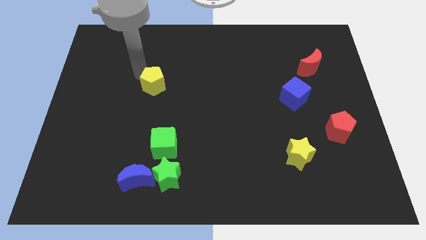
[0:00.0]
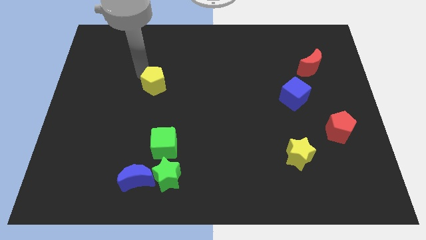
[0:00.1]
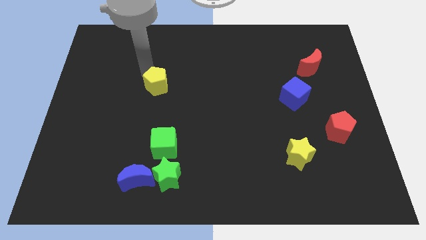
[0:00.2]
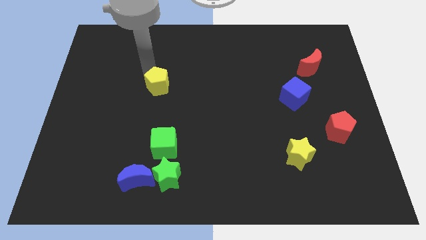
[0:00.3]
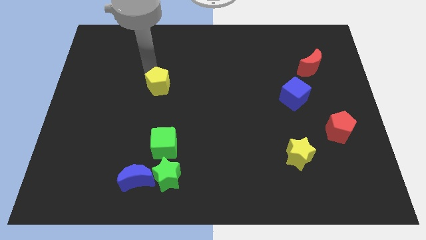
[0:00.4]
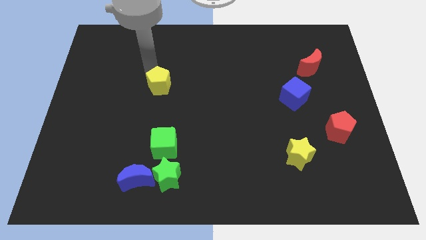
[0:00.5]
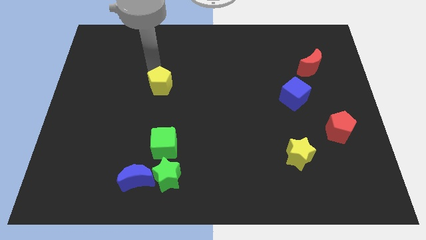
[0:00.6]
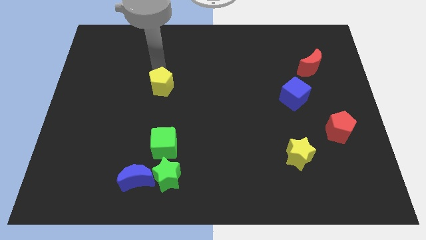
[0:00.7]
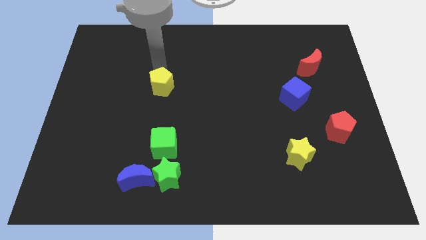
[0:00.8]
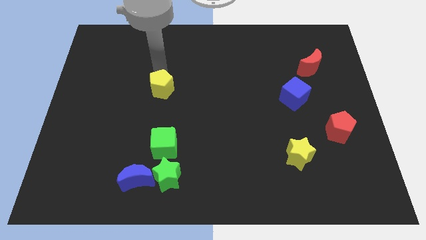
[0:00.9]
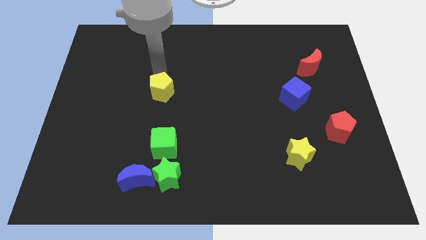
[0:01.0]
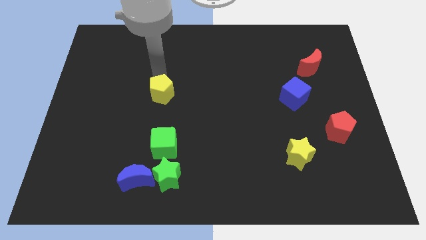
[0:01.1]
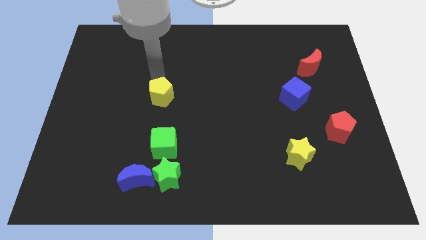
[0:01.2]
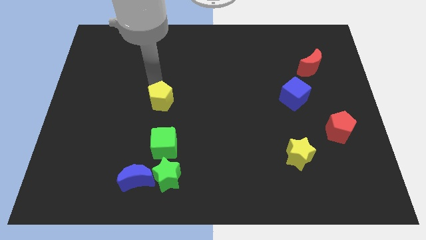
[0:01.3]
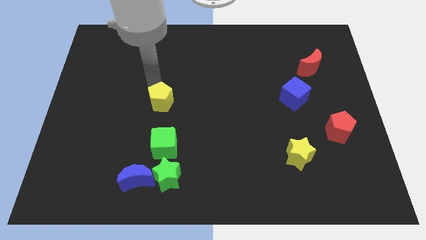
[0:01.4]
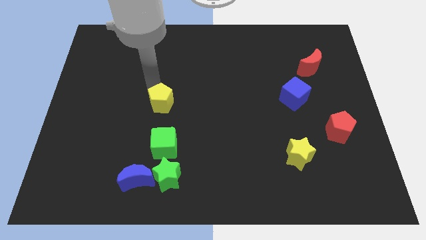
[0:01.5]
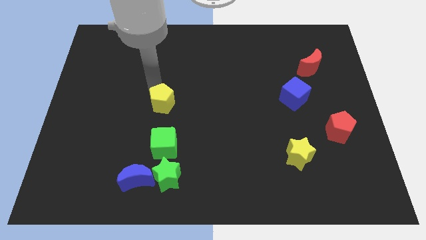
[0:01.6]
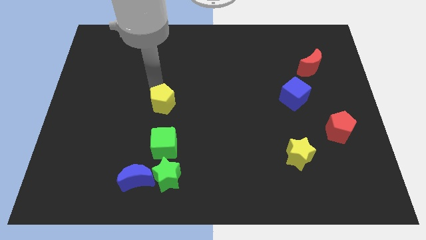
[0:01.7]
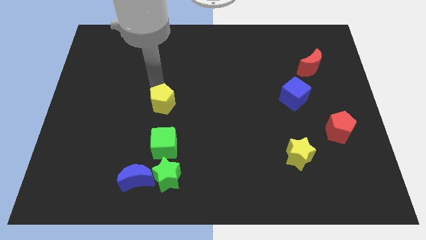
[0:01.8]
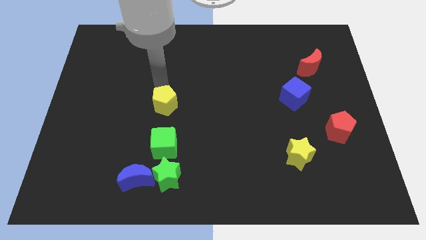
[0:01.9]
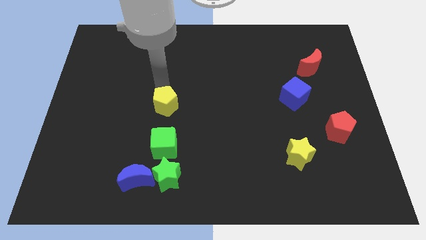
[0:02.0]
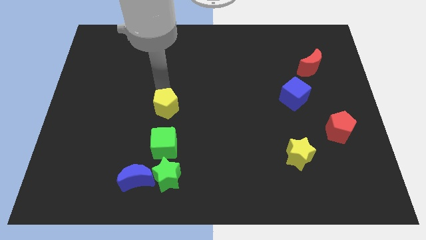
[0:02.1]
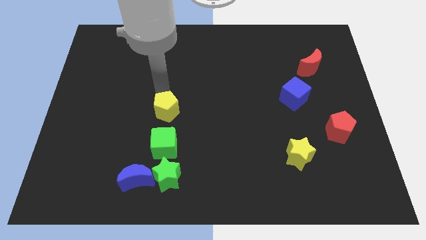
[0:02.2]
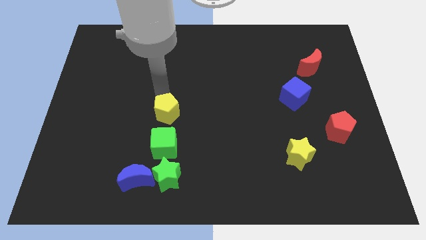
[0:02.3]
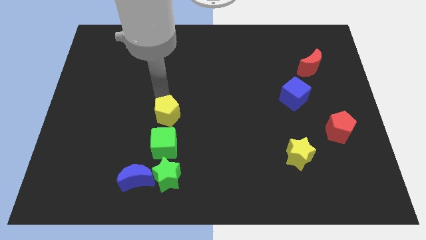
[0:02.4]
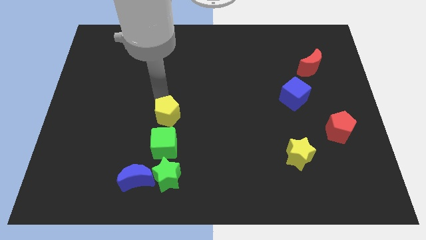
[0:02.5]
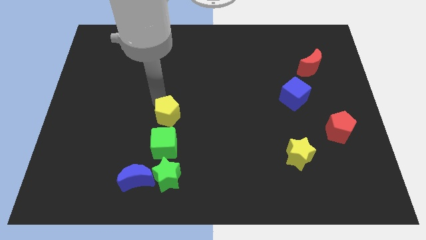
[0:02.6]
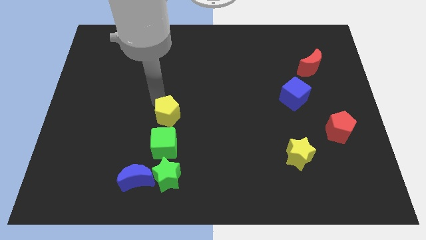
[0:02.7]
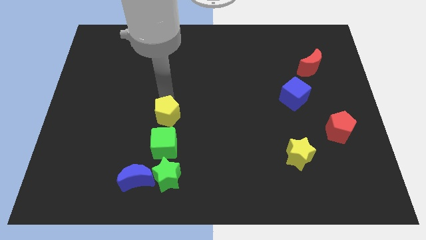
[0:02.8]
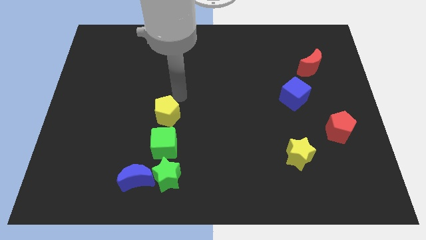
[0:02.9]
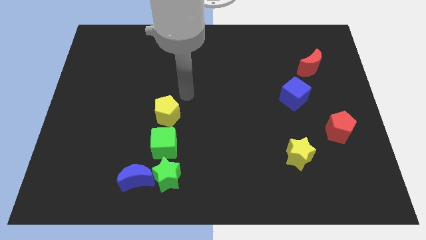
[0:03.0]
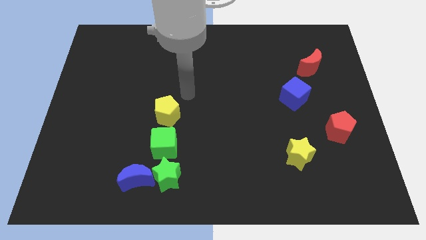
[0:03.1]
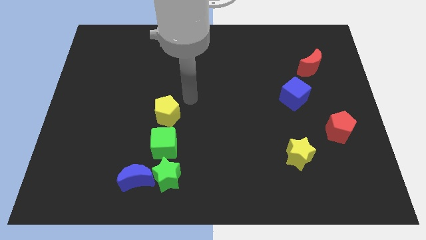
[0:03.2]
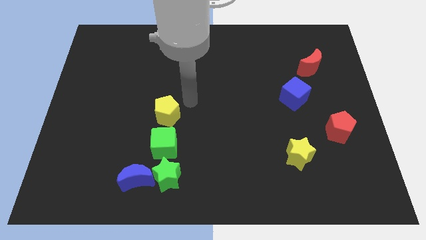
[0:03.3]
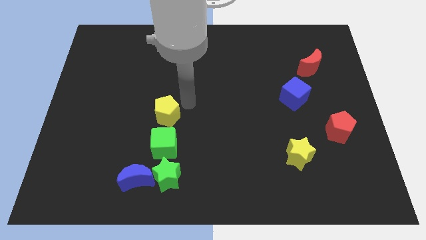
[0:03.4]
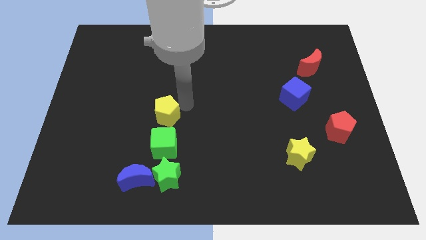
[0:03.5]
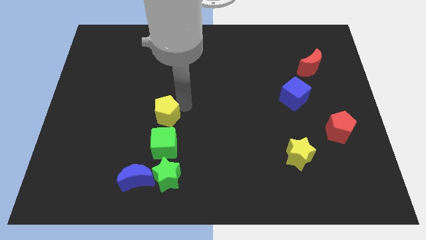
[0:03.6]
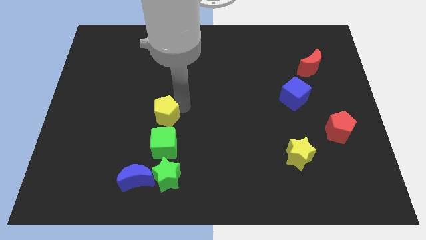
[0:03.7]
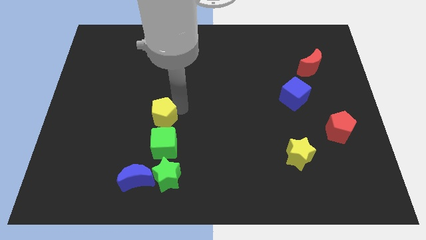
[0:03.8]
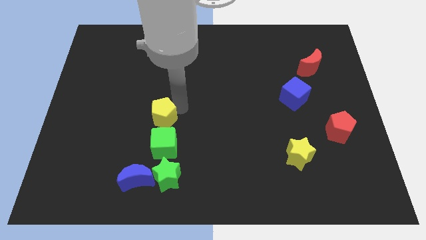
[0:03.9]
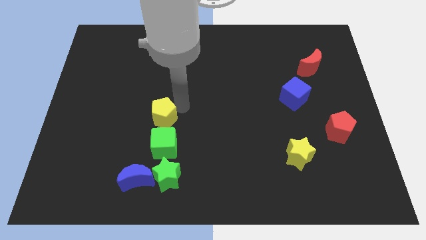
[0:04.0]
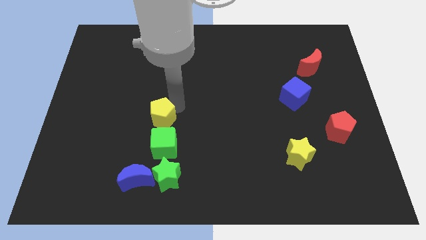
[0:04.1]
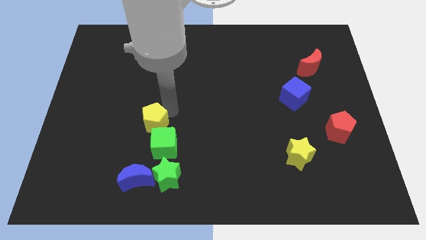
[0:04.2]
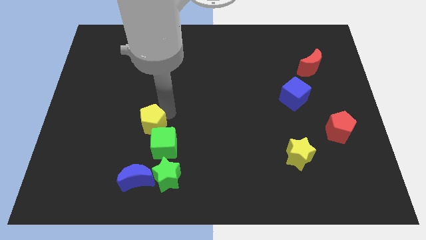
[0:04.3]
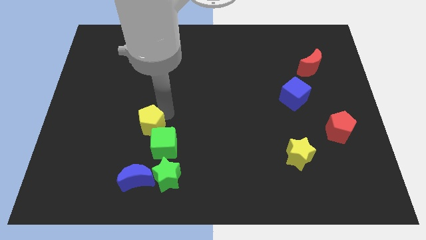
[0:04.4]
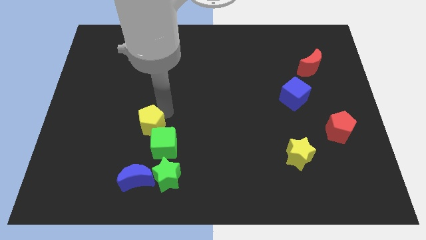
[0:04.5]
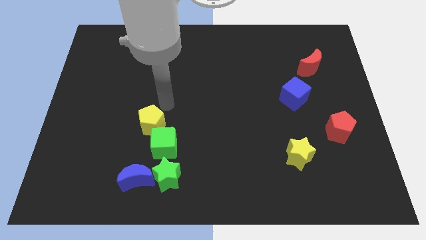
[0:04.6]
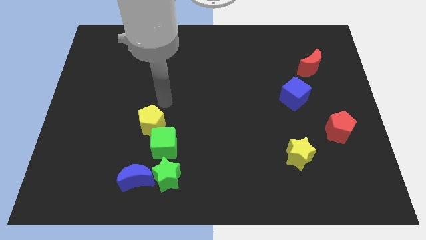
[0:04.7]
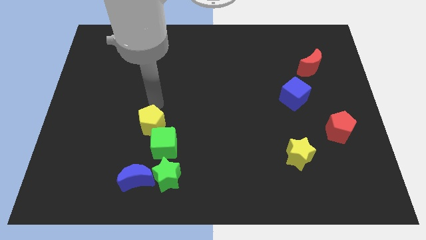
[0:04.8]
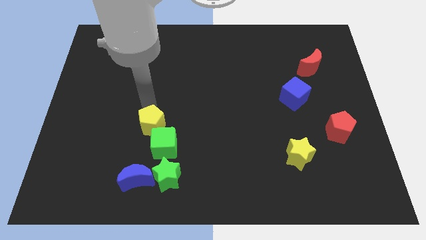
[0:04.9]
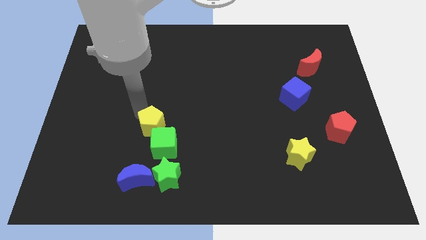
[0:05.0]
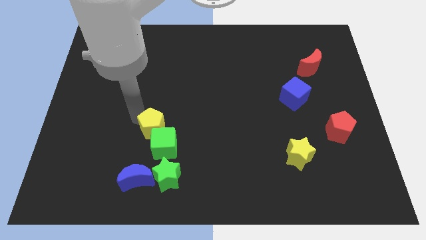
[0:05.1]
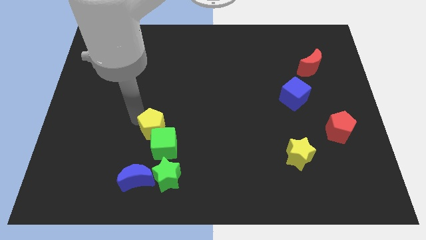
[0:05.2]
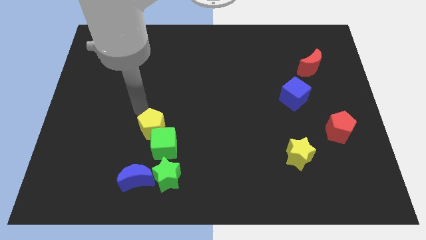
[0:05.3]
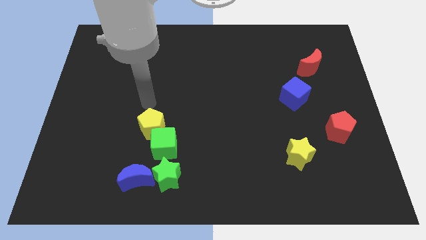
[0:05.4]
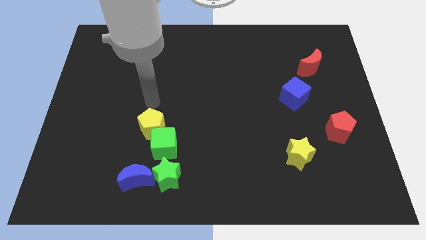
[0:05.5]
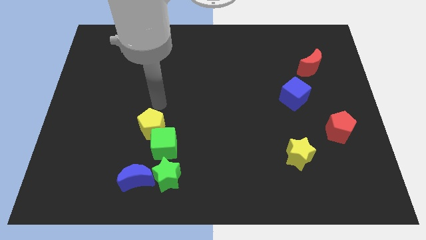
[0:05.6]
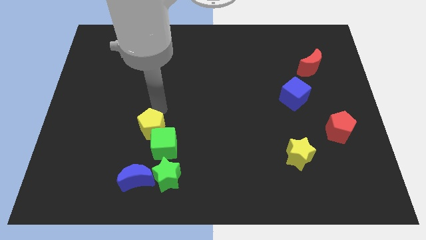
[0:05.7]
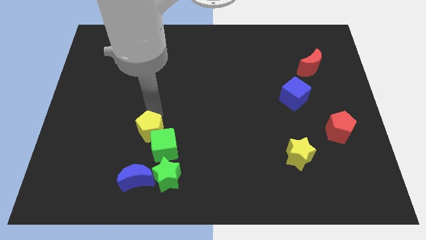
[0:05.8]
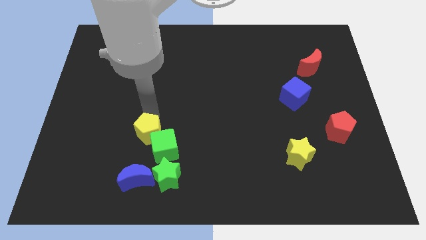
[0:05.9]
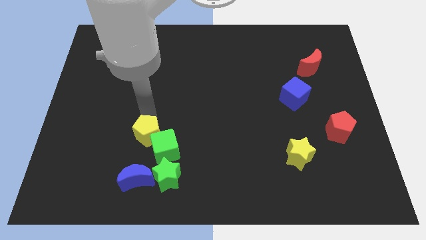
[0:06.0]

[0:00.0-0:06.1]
push the yellow pentagon into the green cube

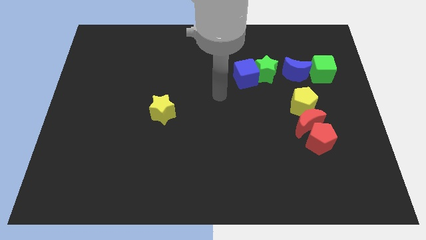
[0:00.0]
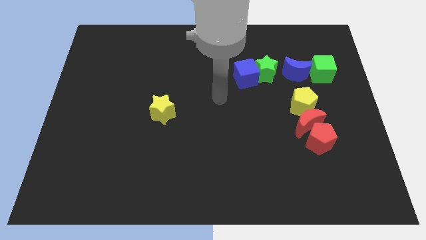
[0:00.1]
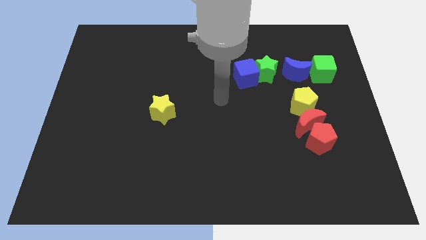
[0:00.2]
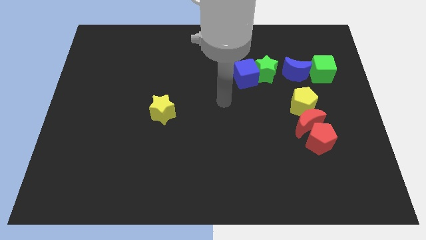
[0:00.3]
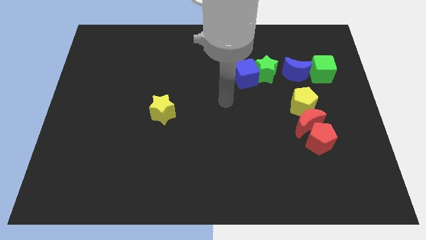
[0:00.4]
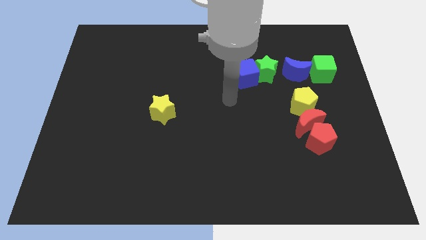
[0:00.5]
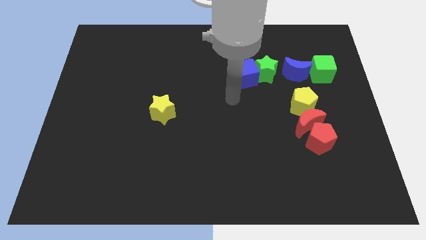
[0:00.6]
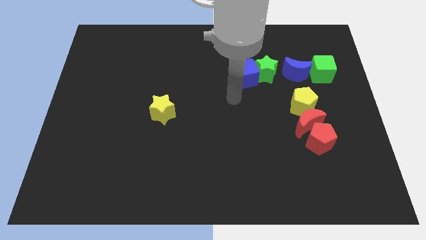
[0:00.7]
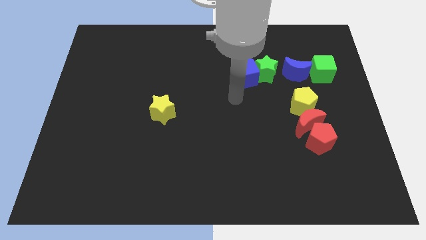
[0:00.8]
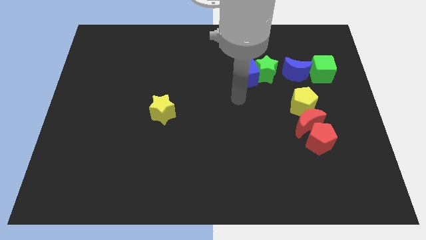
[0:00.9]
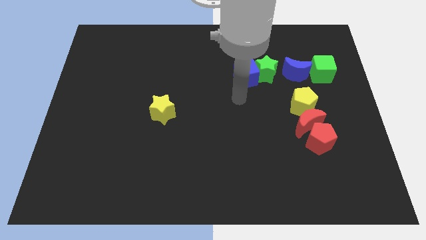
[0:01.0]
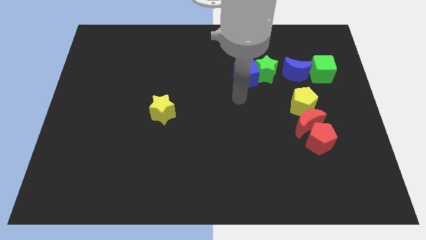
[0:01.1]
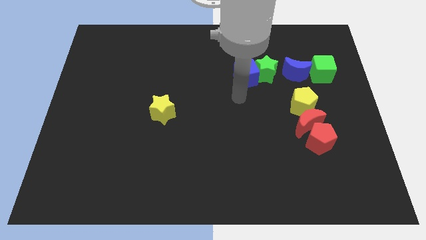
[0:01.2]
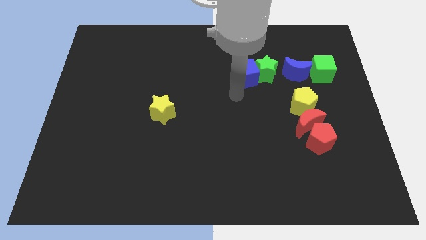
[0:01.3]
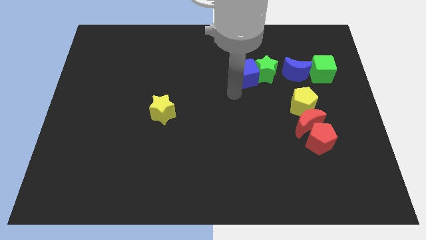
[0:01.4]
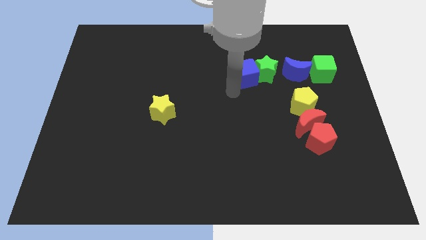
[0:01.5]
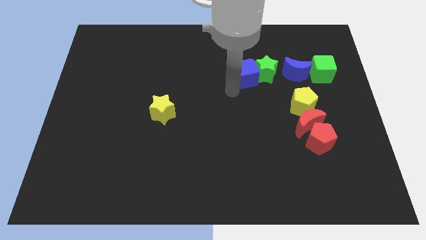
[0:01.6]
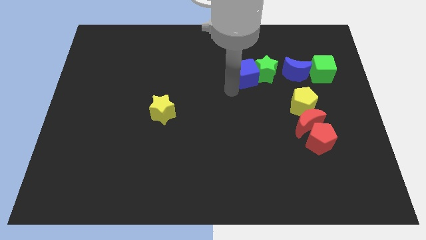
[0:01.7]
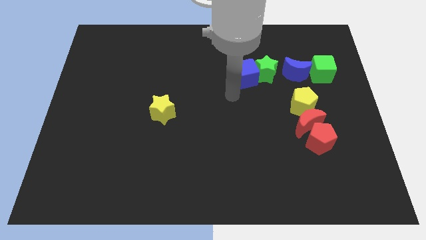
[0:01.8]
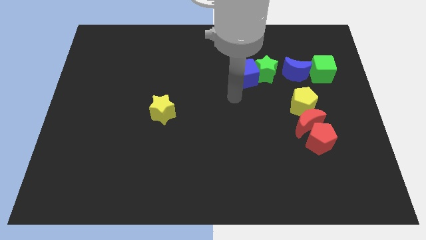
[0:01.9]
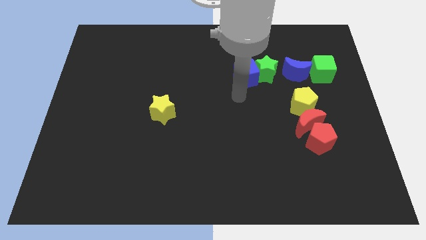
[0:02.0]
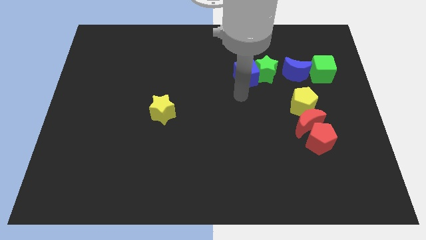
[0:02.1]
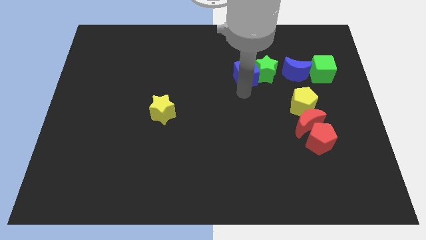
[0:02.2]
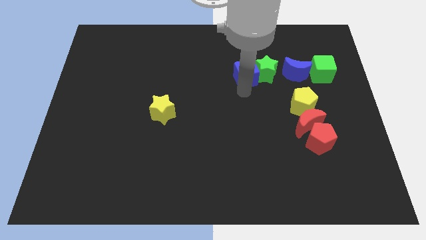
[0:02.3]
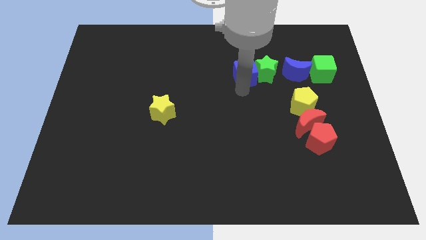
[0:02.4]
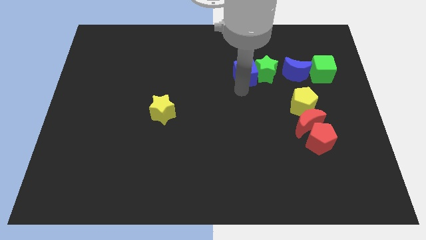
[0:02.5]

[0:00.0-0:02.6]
move the arm to the bottom of the blue cube

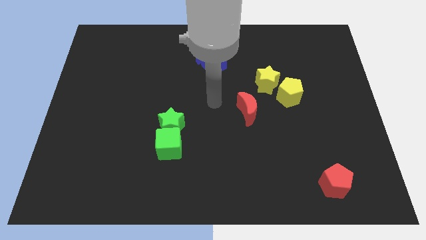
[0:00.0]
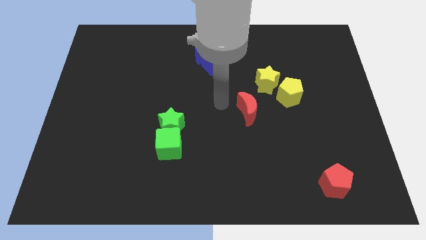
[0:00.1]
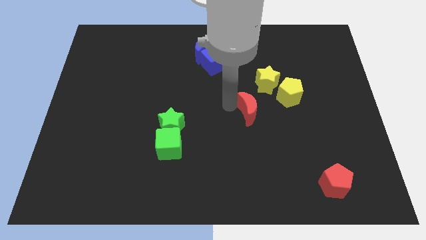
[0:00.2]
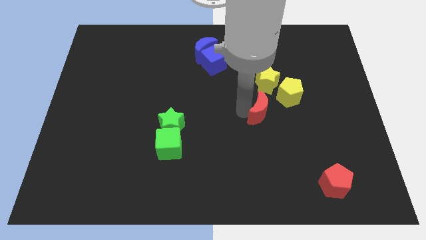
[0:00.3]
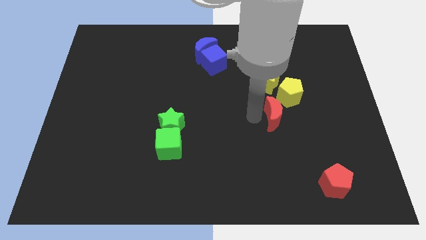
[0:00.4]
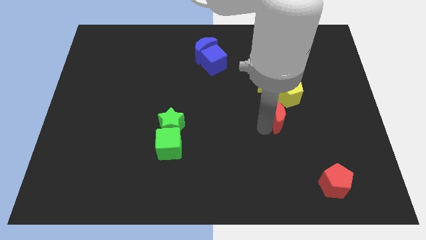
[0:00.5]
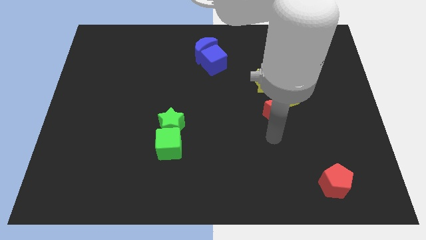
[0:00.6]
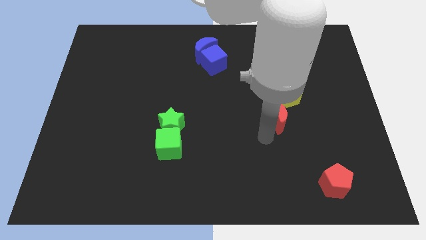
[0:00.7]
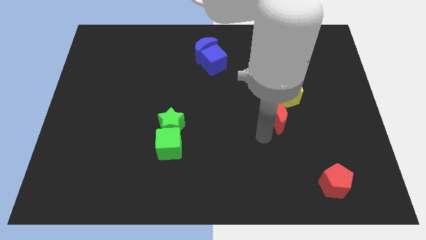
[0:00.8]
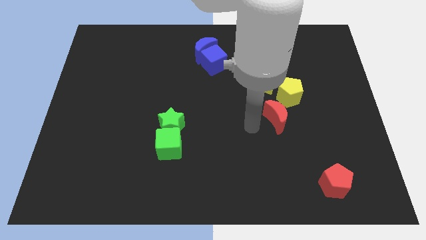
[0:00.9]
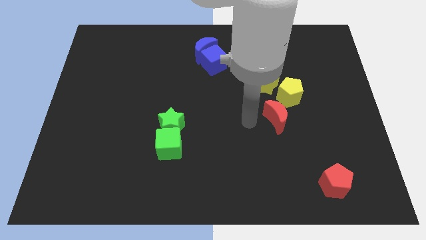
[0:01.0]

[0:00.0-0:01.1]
move the red crescent below the yellow pentagon
